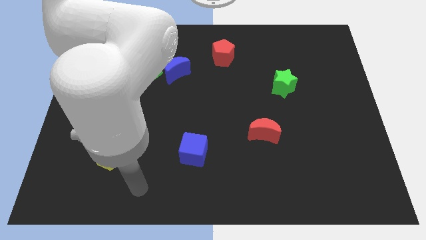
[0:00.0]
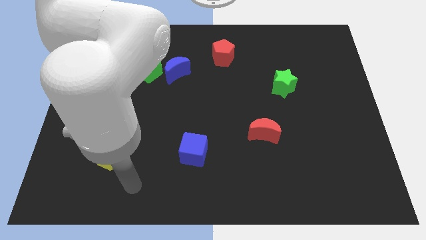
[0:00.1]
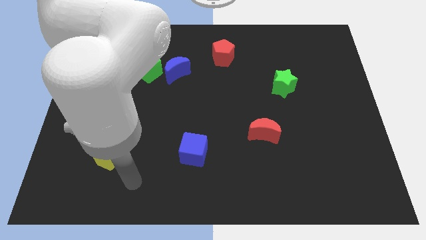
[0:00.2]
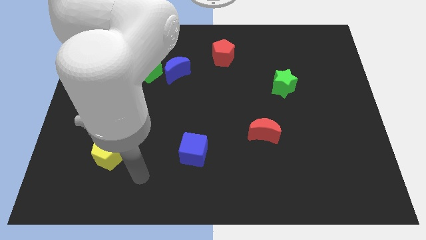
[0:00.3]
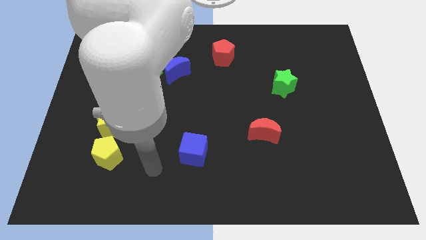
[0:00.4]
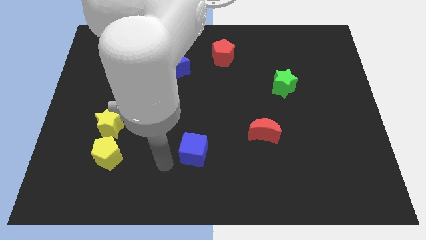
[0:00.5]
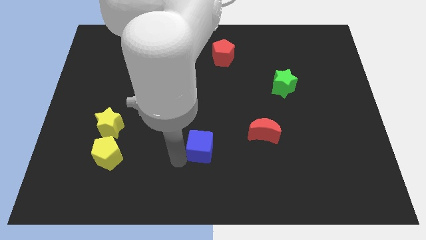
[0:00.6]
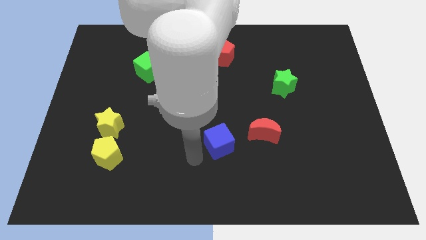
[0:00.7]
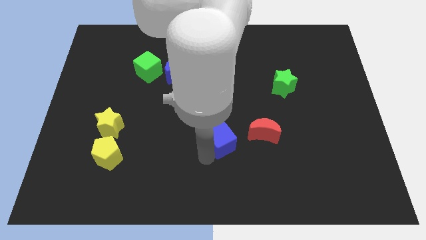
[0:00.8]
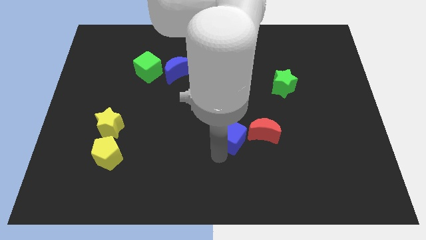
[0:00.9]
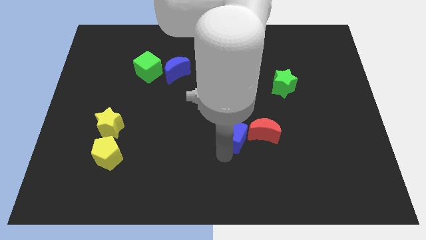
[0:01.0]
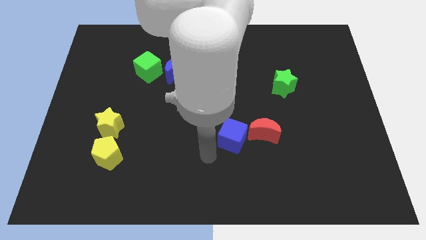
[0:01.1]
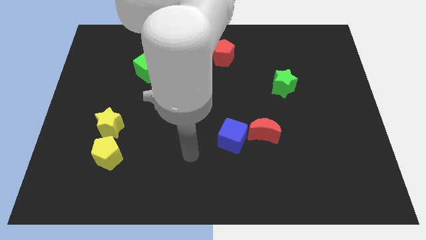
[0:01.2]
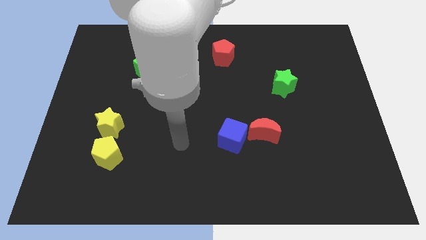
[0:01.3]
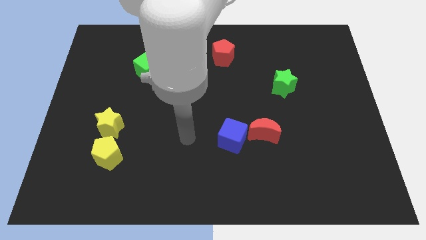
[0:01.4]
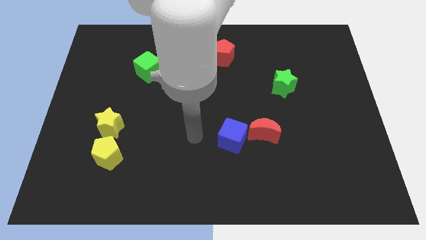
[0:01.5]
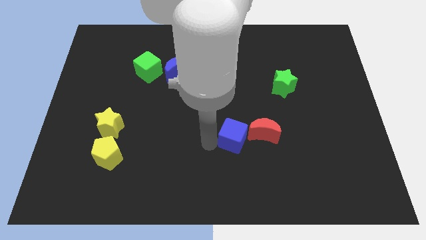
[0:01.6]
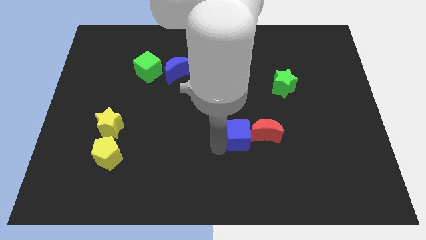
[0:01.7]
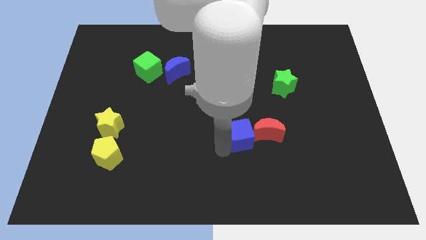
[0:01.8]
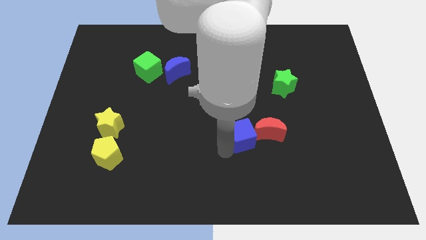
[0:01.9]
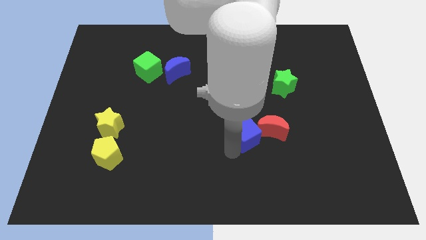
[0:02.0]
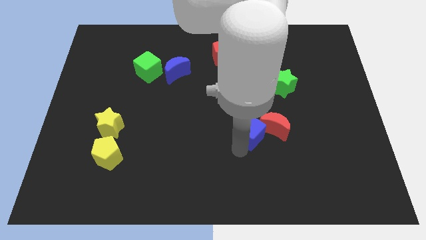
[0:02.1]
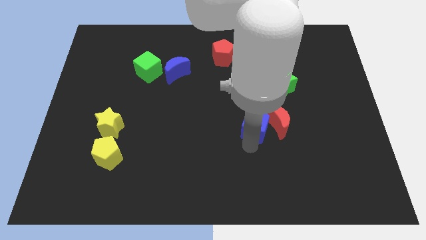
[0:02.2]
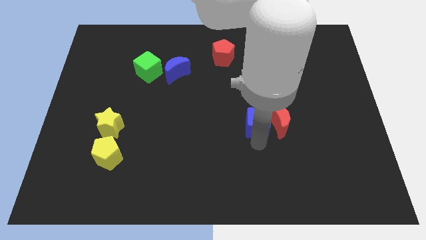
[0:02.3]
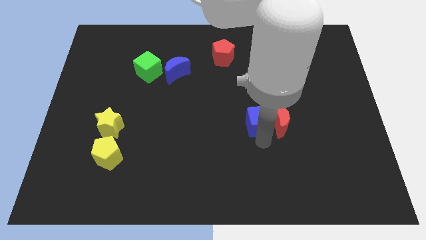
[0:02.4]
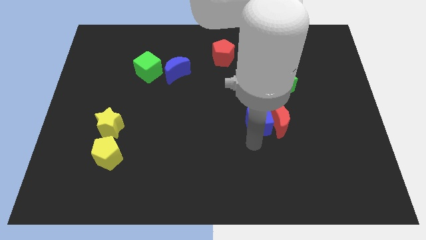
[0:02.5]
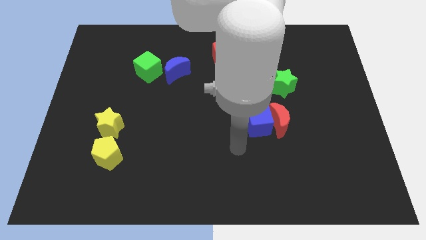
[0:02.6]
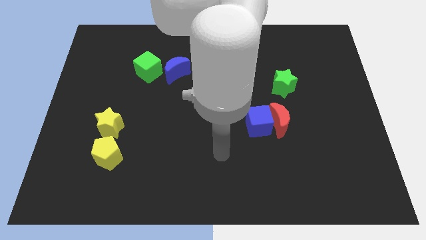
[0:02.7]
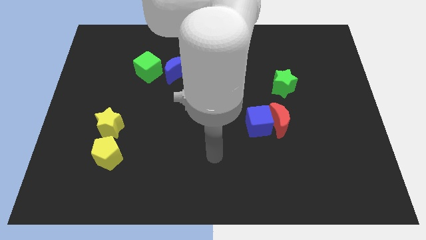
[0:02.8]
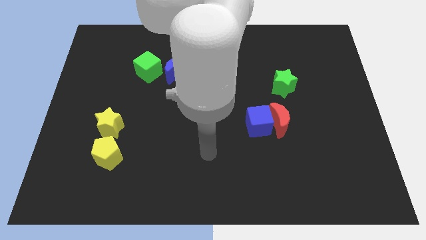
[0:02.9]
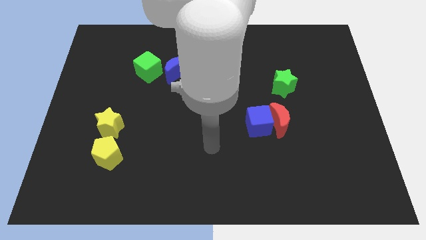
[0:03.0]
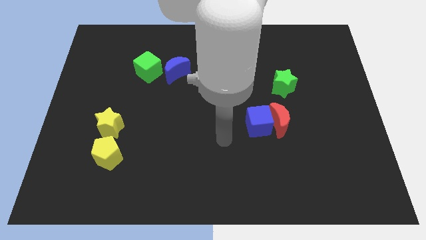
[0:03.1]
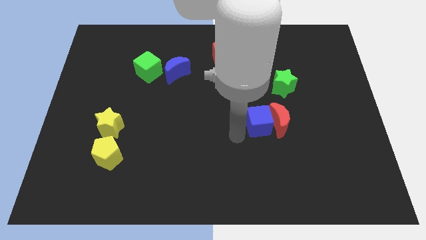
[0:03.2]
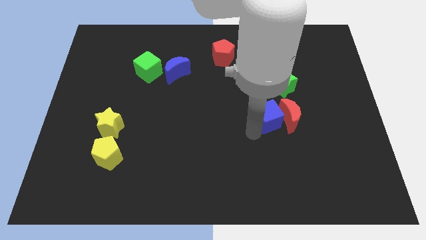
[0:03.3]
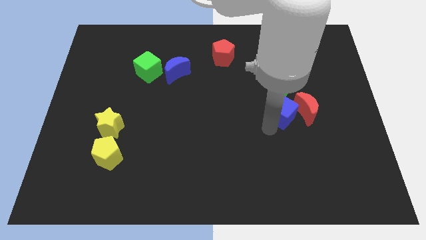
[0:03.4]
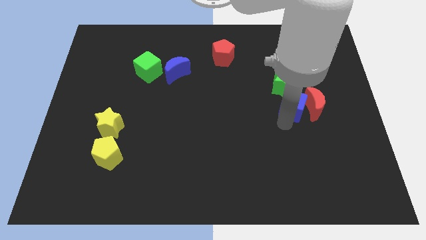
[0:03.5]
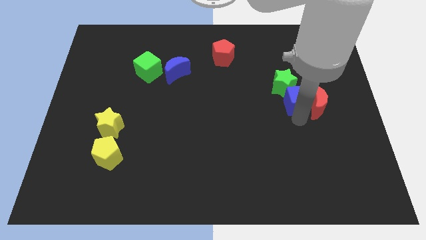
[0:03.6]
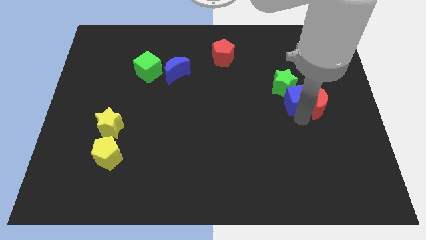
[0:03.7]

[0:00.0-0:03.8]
move the red crescent and the blue cube towards the green star

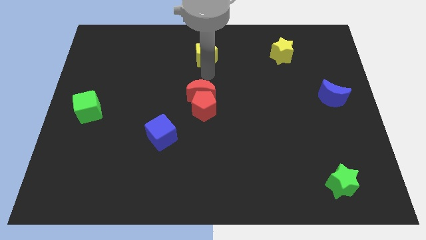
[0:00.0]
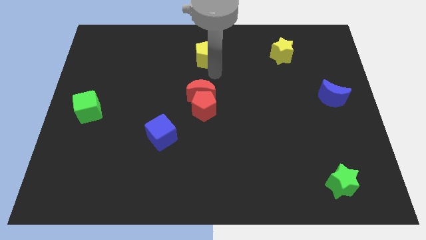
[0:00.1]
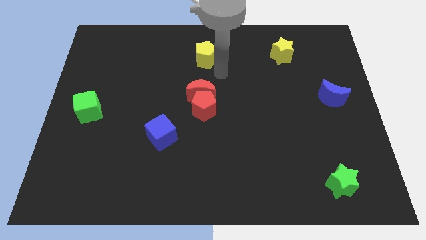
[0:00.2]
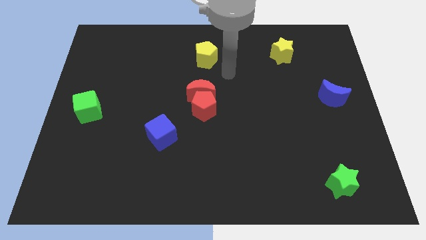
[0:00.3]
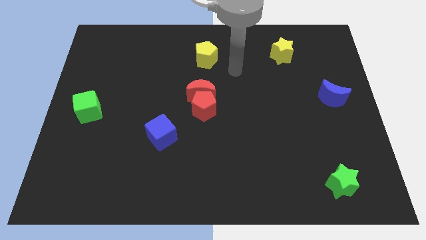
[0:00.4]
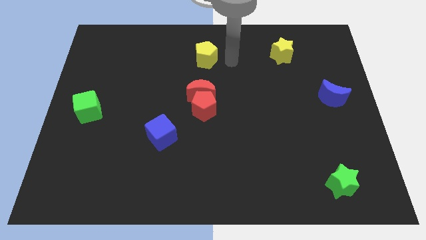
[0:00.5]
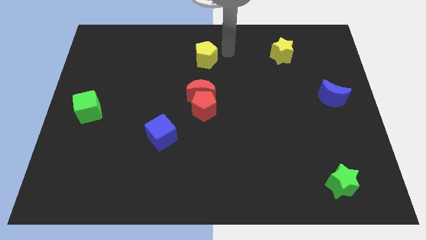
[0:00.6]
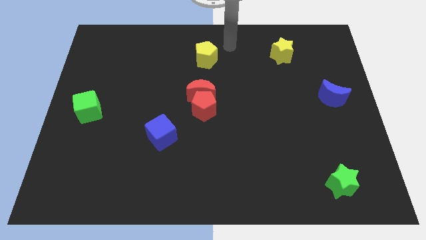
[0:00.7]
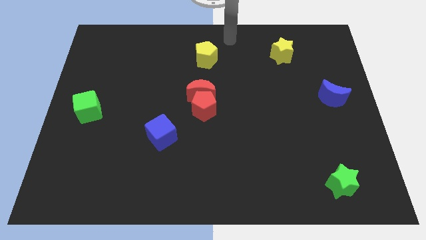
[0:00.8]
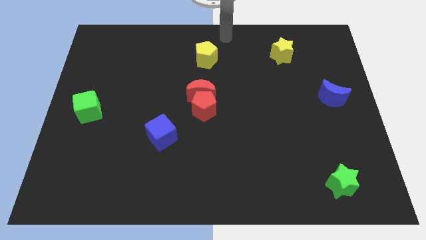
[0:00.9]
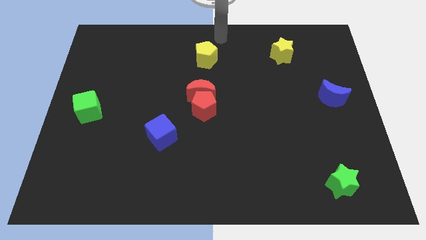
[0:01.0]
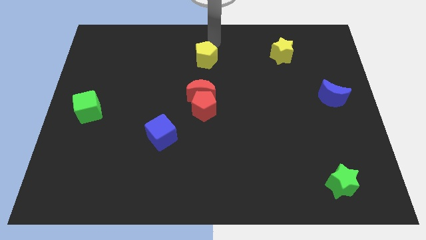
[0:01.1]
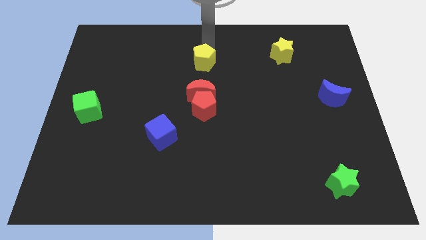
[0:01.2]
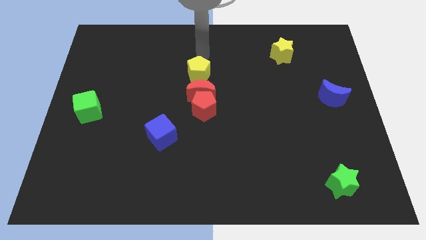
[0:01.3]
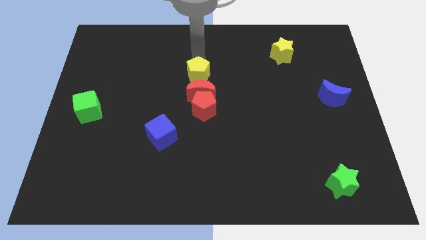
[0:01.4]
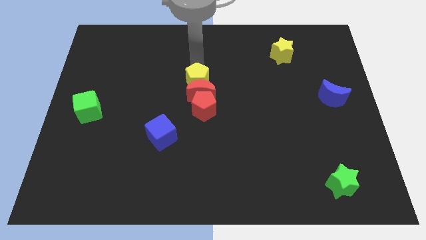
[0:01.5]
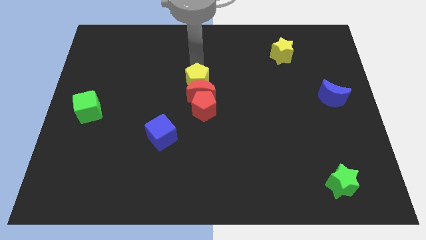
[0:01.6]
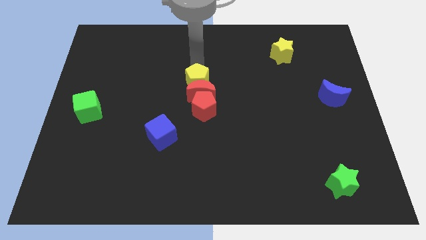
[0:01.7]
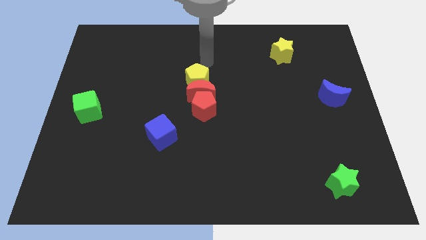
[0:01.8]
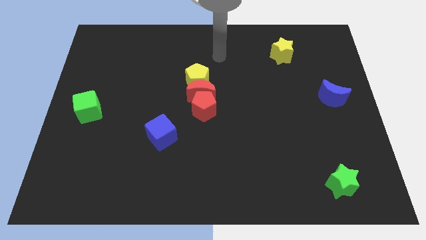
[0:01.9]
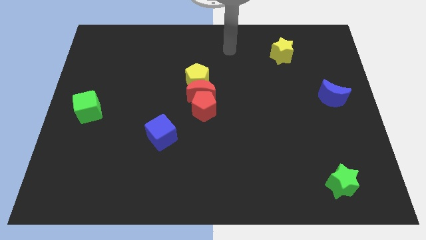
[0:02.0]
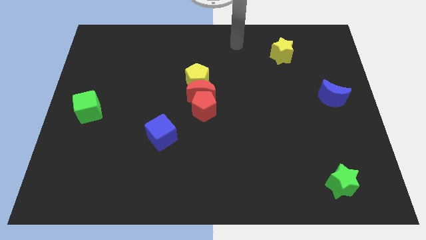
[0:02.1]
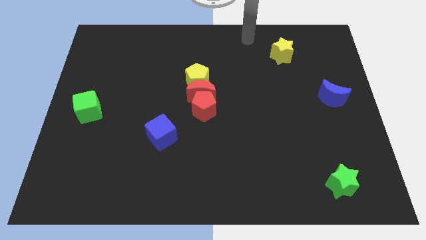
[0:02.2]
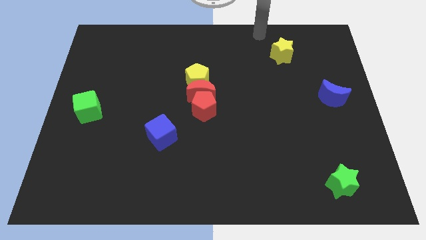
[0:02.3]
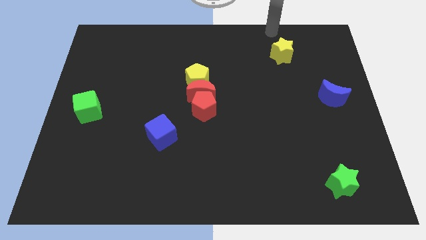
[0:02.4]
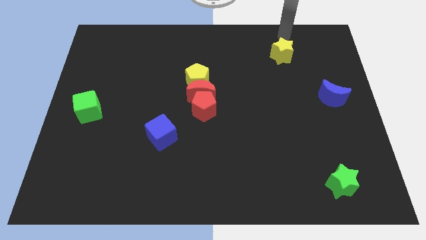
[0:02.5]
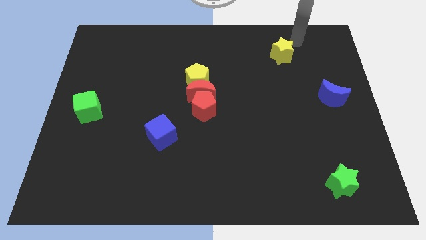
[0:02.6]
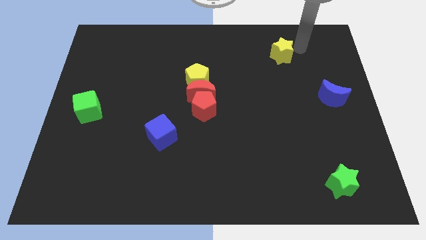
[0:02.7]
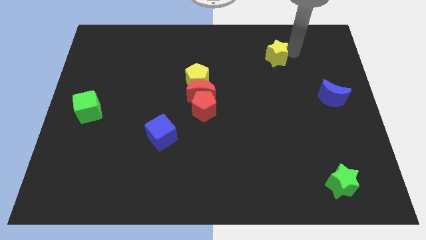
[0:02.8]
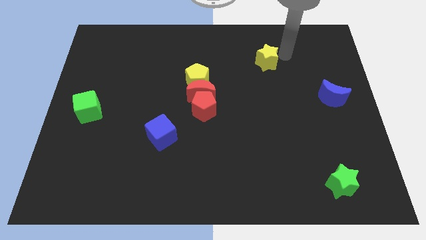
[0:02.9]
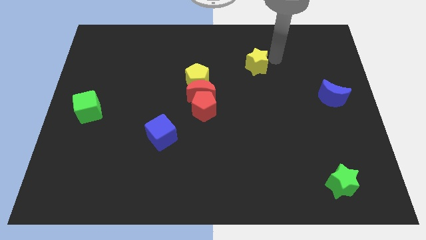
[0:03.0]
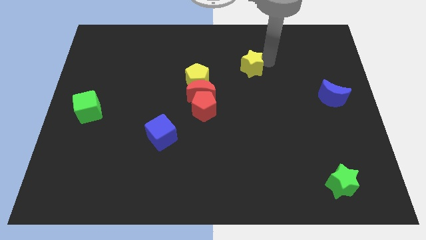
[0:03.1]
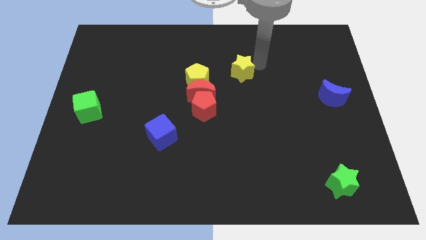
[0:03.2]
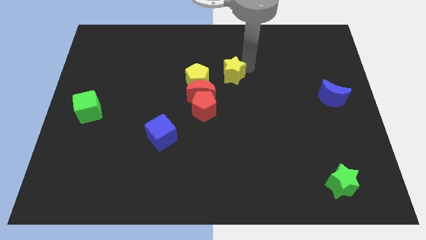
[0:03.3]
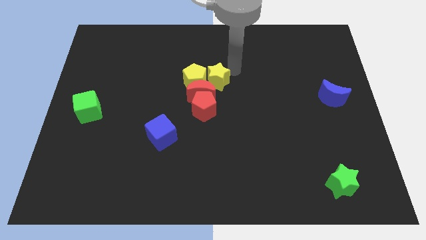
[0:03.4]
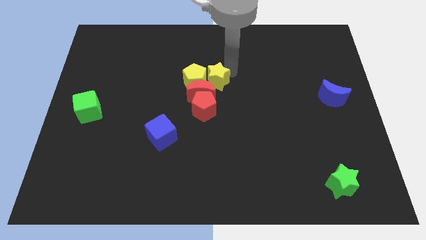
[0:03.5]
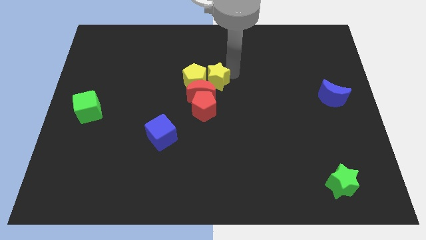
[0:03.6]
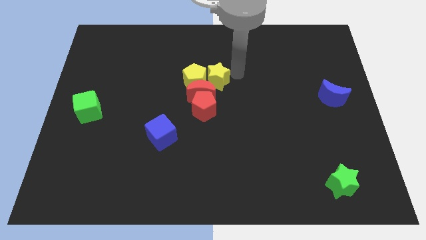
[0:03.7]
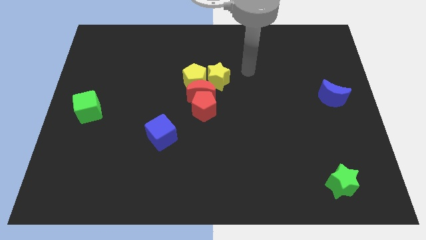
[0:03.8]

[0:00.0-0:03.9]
push both the yellow blocks to the top of the red moon

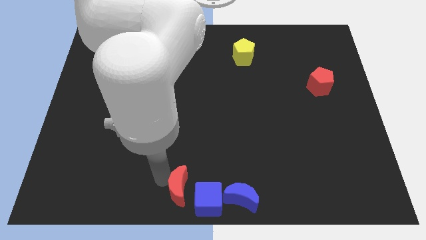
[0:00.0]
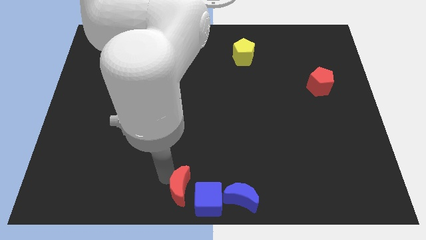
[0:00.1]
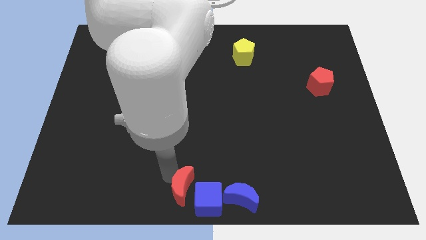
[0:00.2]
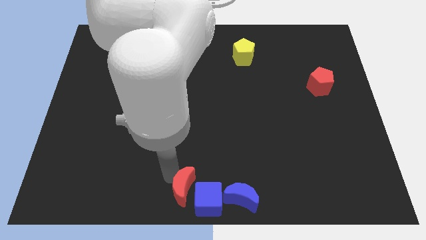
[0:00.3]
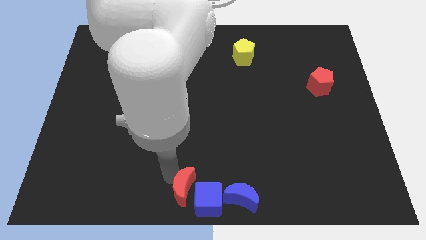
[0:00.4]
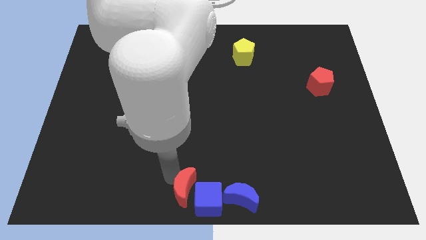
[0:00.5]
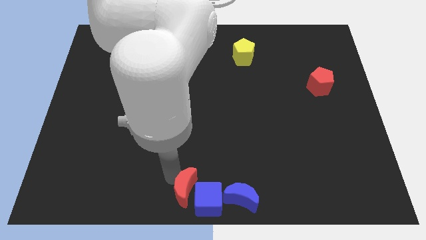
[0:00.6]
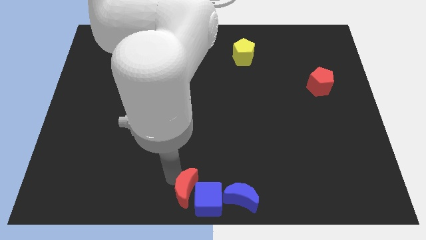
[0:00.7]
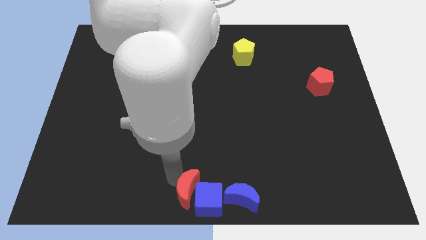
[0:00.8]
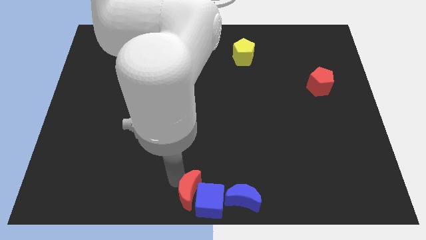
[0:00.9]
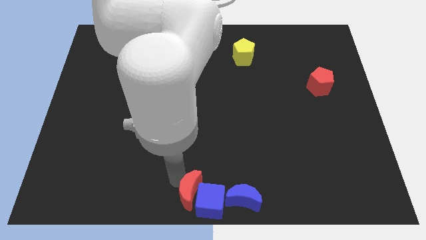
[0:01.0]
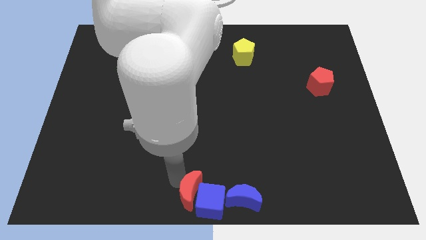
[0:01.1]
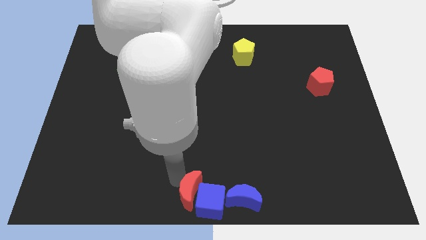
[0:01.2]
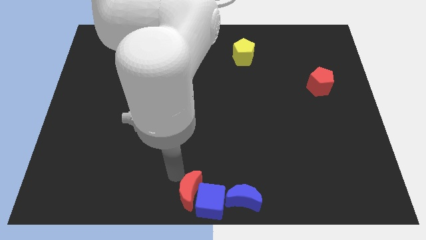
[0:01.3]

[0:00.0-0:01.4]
move the red crescent into the blue cube
